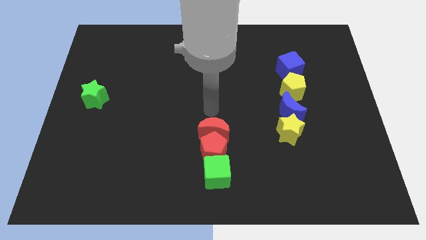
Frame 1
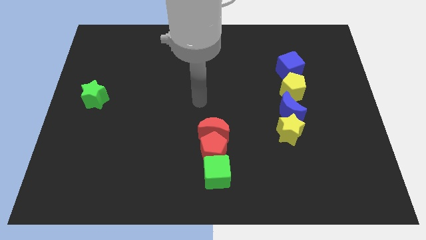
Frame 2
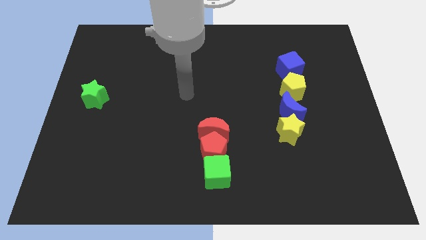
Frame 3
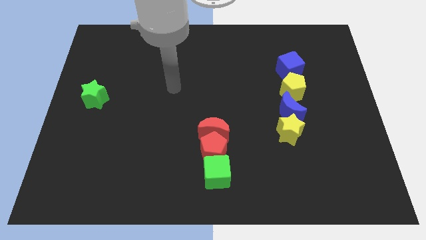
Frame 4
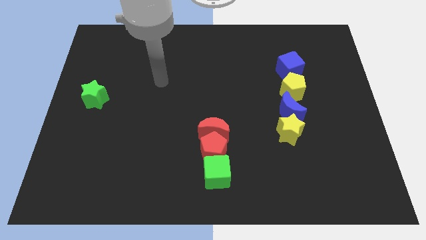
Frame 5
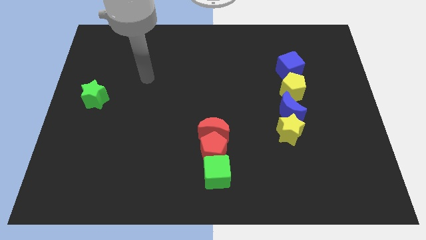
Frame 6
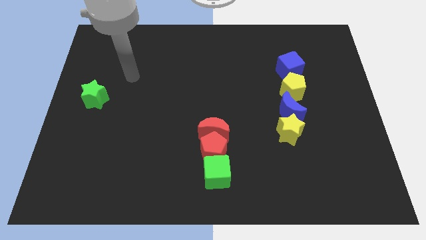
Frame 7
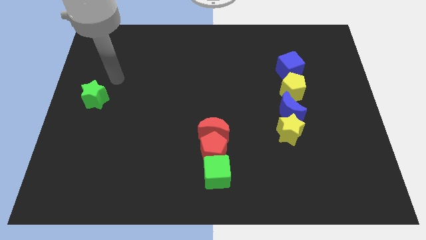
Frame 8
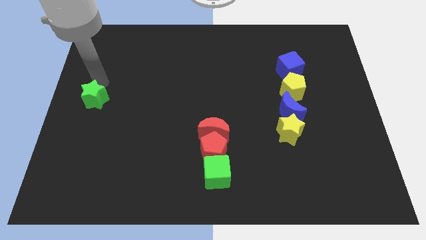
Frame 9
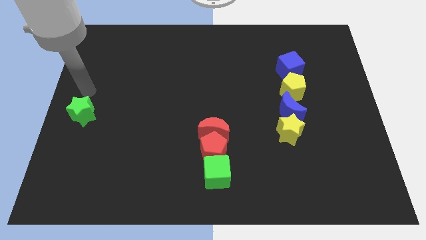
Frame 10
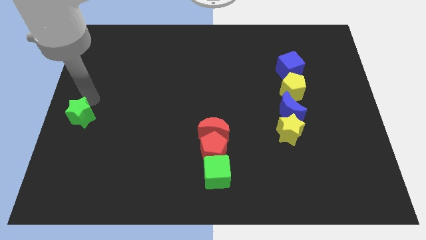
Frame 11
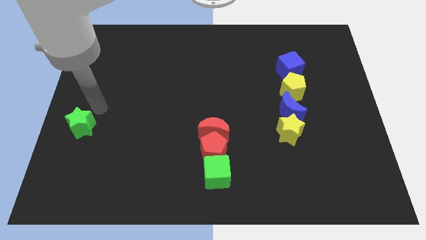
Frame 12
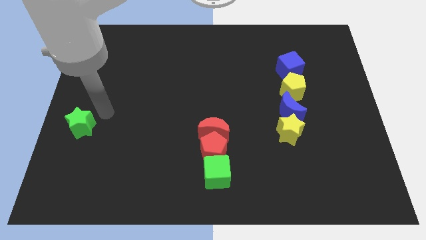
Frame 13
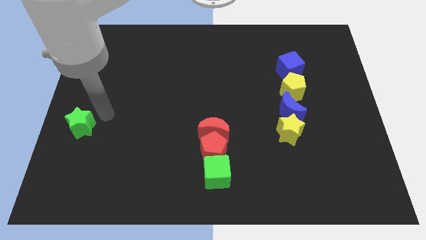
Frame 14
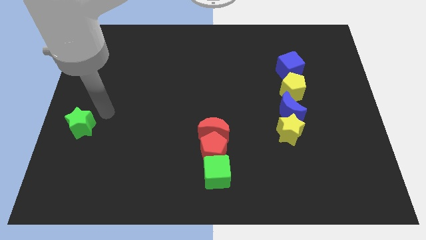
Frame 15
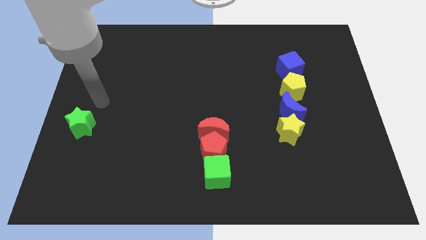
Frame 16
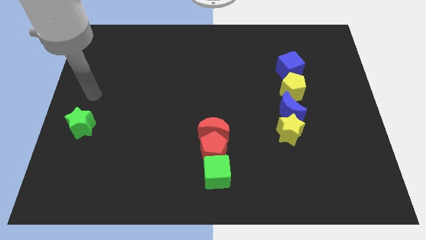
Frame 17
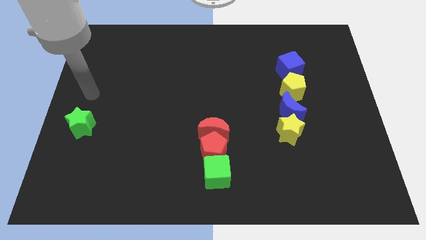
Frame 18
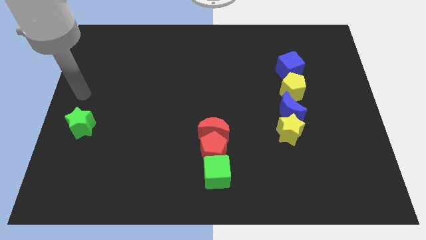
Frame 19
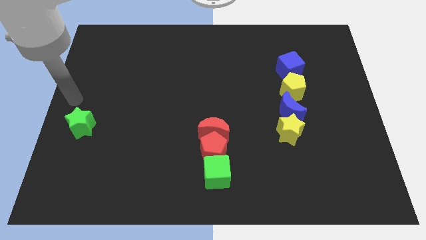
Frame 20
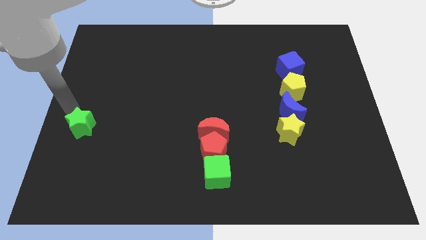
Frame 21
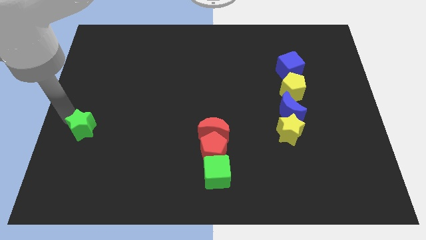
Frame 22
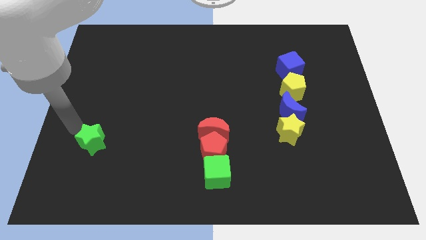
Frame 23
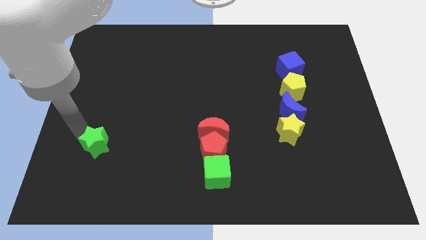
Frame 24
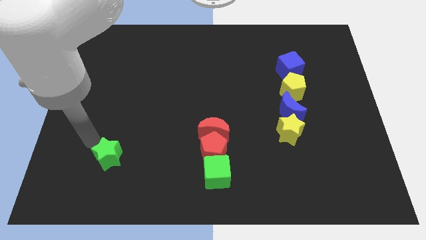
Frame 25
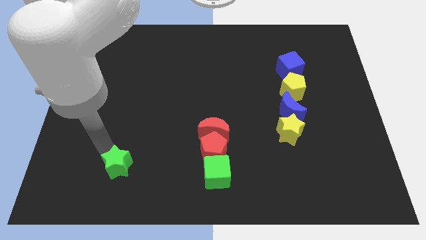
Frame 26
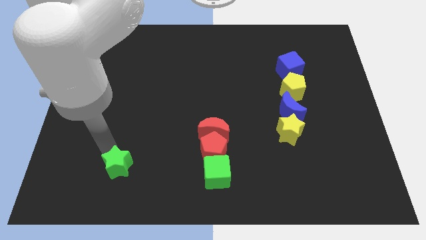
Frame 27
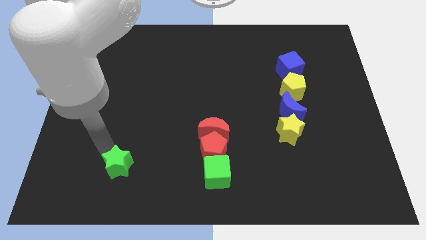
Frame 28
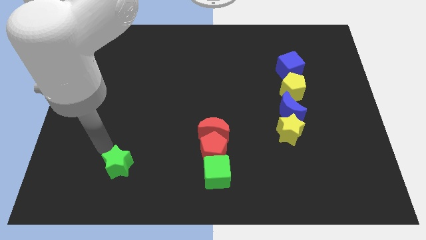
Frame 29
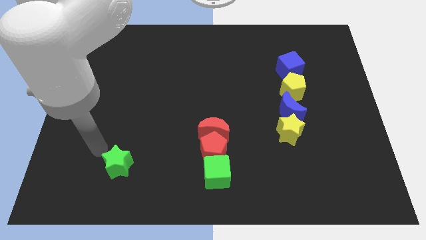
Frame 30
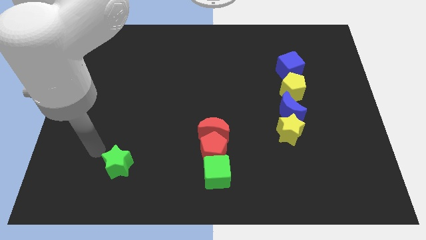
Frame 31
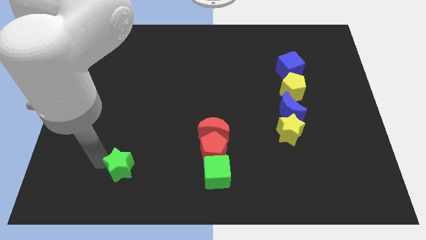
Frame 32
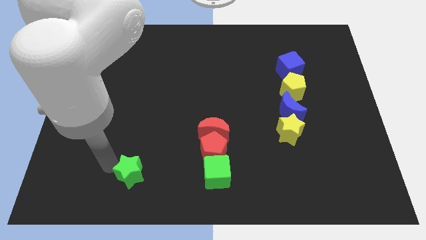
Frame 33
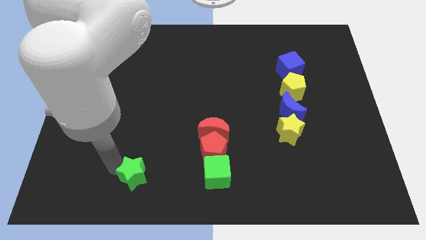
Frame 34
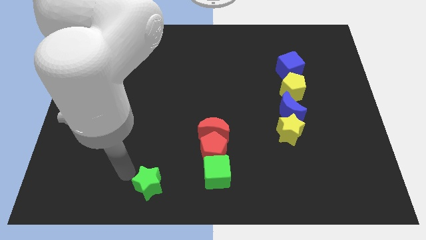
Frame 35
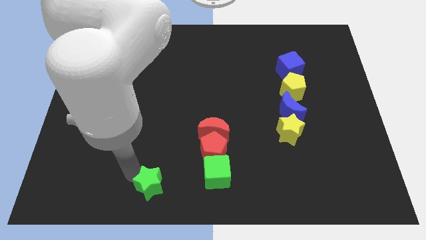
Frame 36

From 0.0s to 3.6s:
push the green star to the bottom of the board

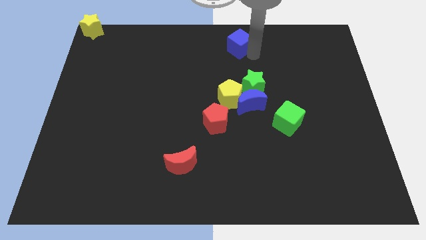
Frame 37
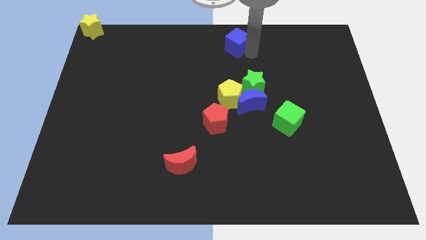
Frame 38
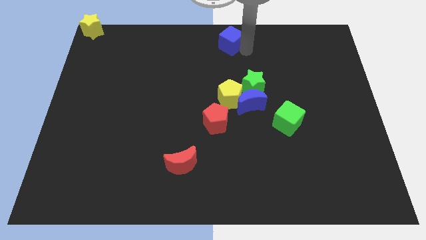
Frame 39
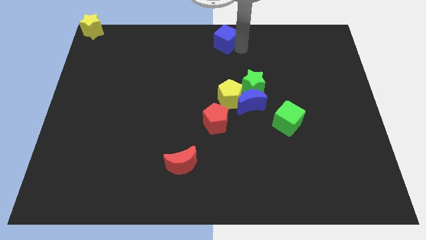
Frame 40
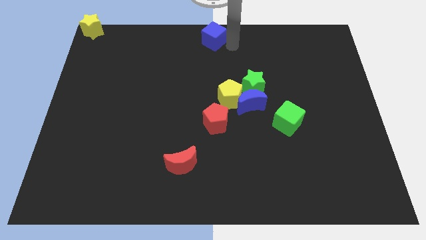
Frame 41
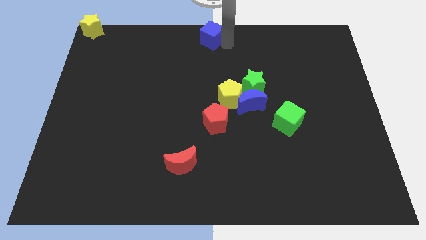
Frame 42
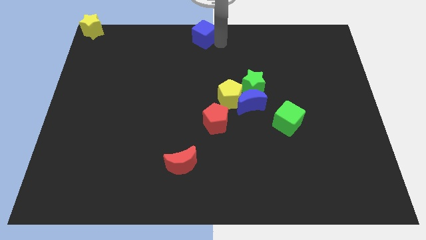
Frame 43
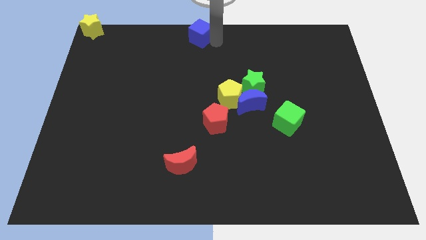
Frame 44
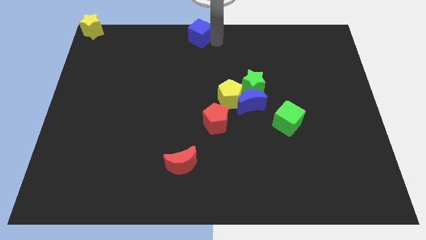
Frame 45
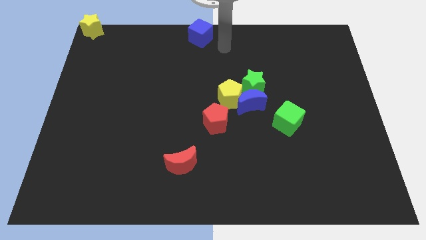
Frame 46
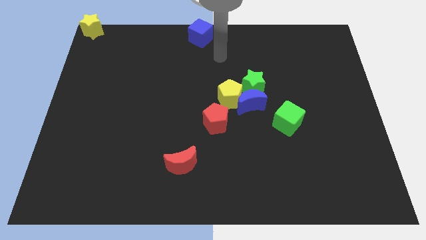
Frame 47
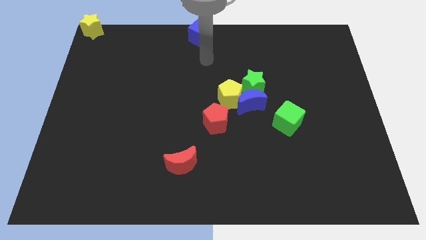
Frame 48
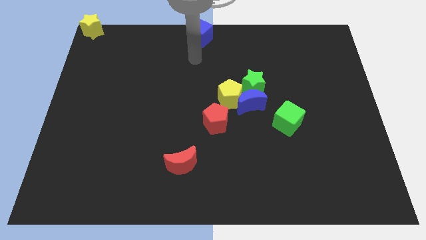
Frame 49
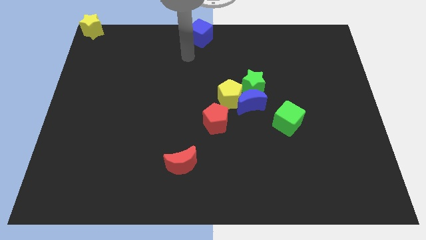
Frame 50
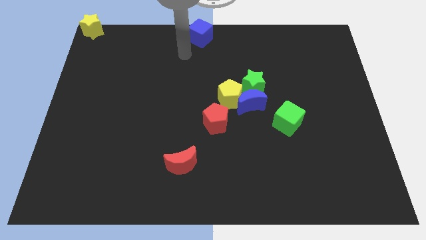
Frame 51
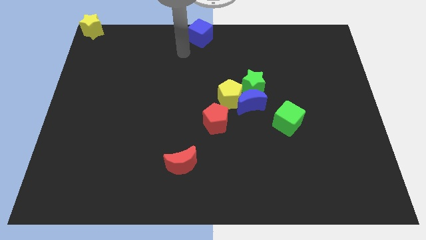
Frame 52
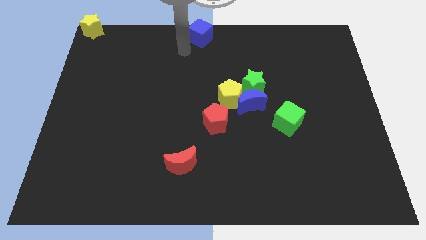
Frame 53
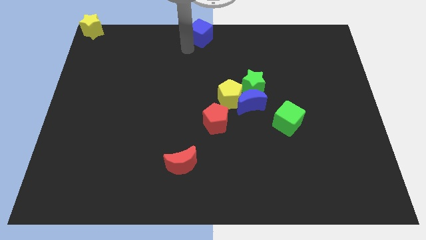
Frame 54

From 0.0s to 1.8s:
drag the blue cube to the top center of the board

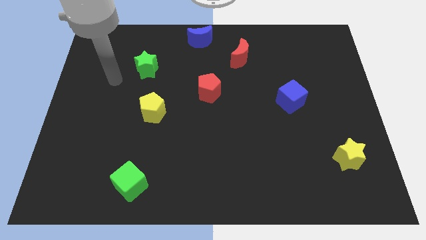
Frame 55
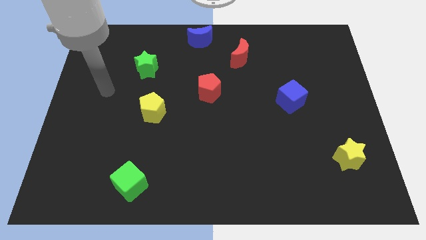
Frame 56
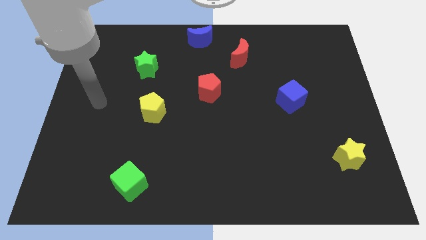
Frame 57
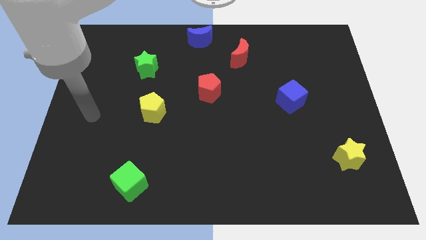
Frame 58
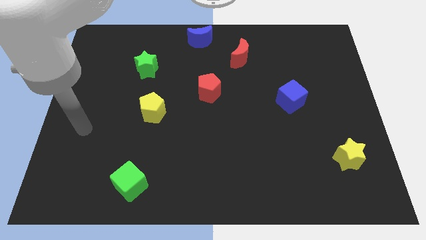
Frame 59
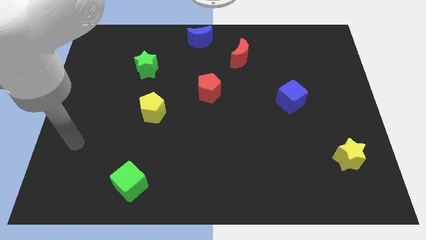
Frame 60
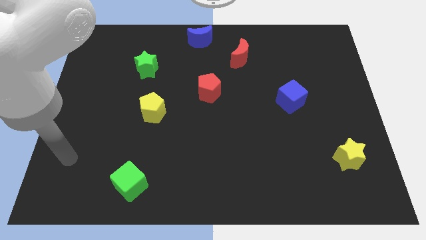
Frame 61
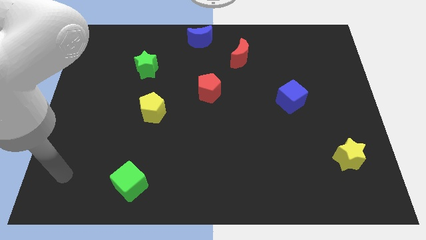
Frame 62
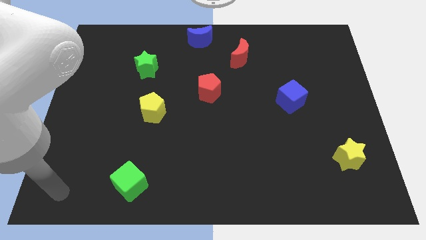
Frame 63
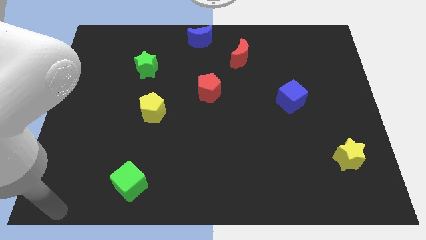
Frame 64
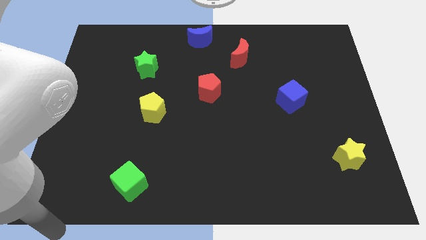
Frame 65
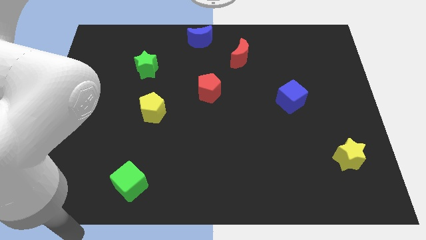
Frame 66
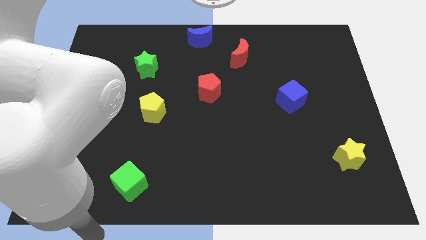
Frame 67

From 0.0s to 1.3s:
drag your arm to the bottom center

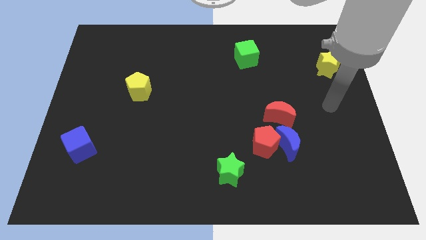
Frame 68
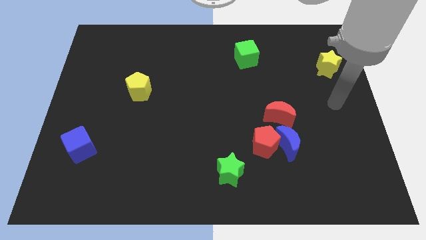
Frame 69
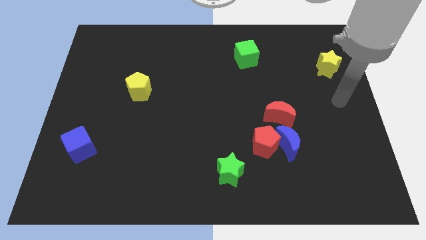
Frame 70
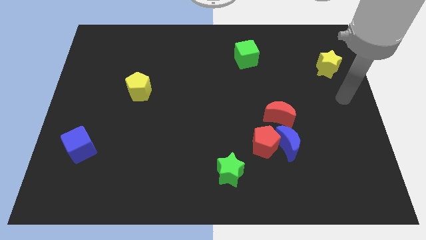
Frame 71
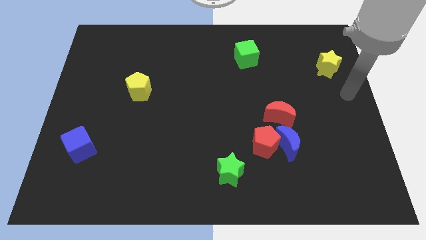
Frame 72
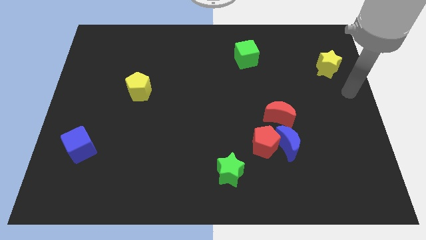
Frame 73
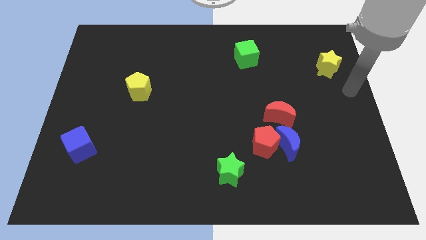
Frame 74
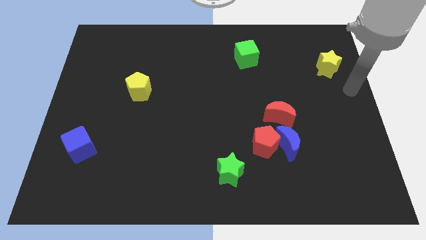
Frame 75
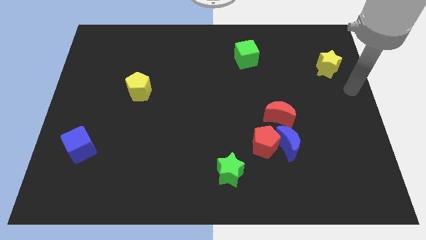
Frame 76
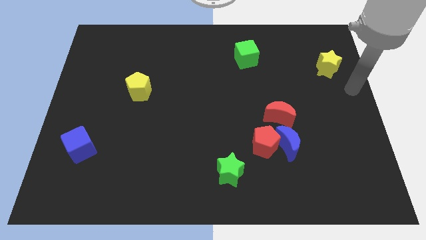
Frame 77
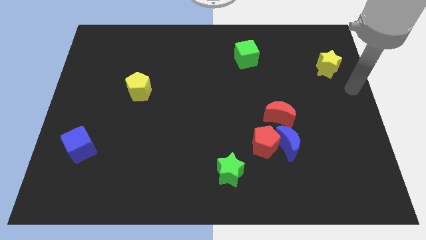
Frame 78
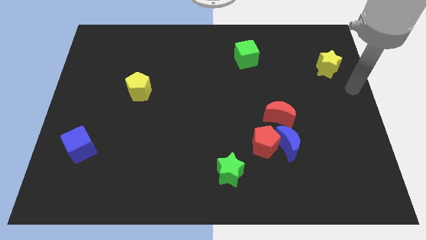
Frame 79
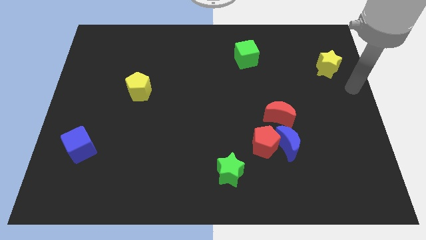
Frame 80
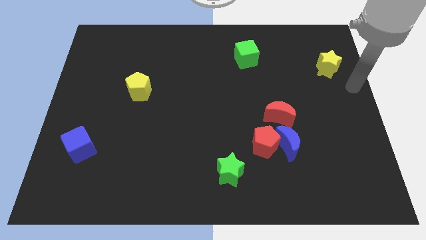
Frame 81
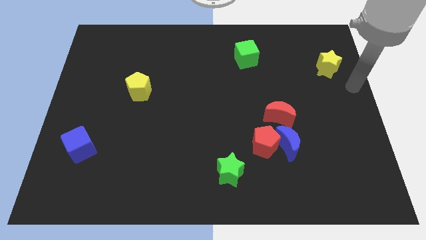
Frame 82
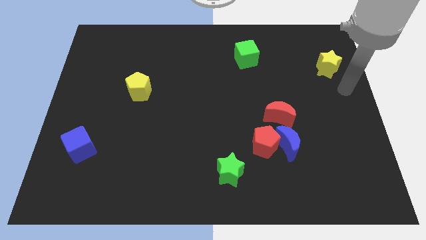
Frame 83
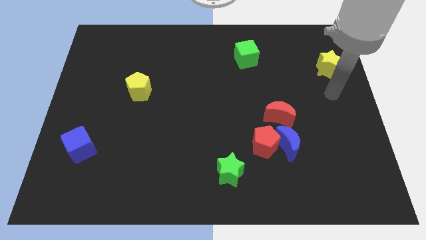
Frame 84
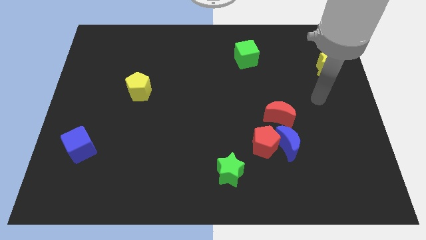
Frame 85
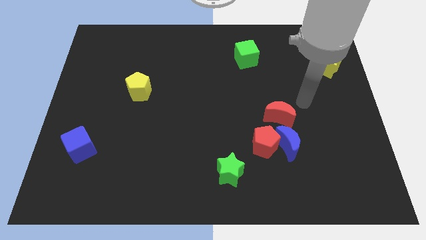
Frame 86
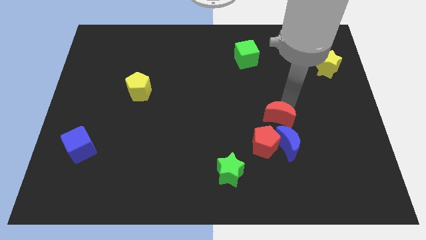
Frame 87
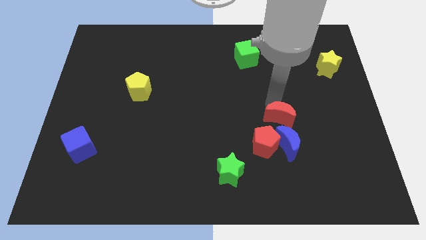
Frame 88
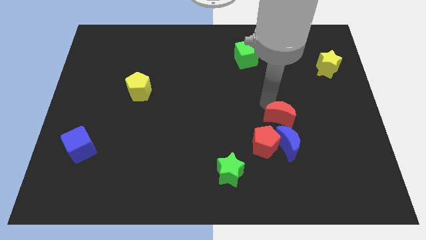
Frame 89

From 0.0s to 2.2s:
move the arm above the red moon
